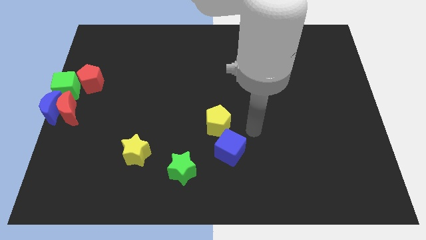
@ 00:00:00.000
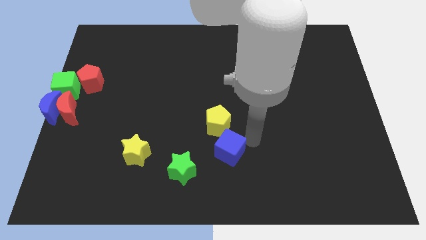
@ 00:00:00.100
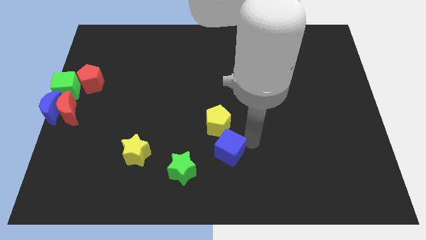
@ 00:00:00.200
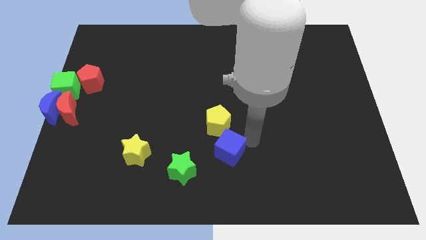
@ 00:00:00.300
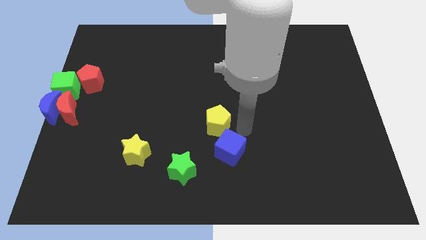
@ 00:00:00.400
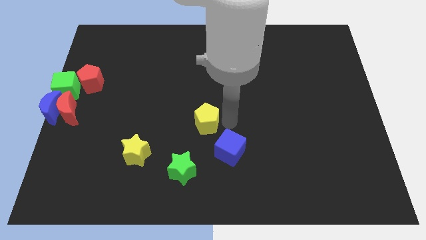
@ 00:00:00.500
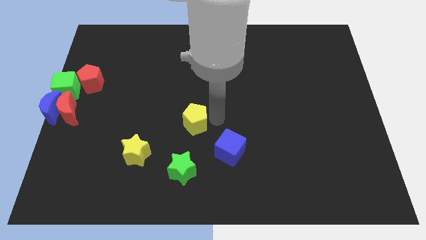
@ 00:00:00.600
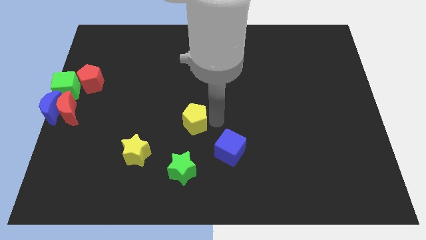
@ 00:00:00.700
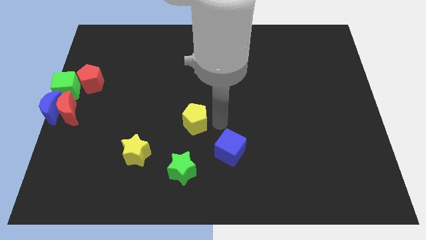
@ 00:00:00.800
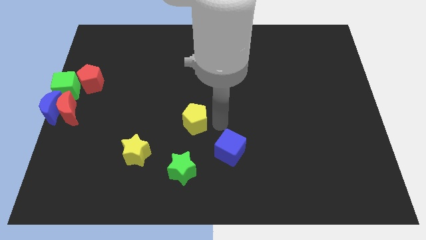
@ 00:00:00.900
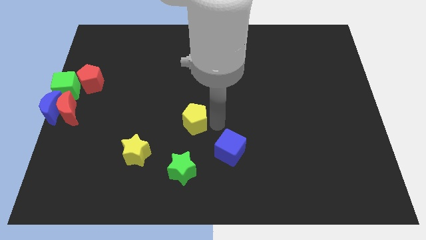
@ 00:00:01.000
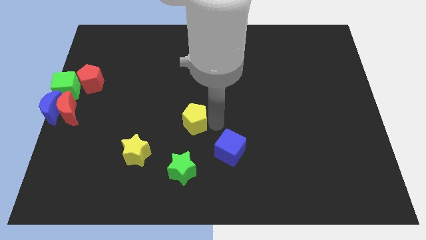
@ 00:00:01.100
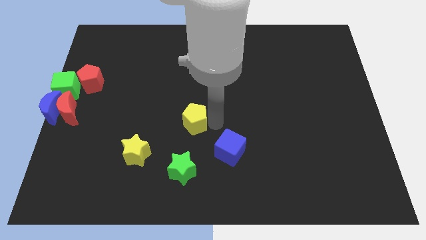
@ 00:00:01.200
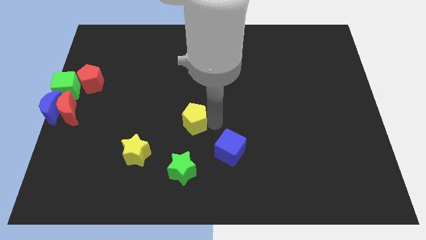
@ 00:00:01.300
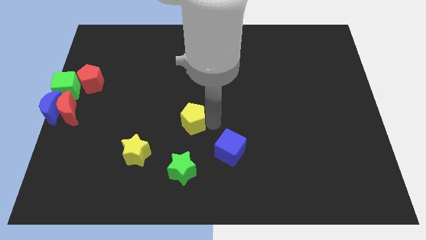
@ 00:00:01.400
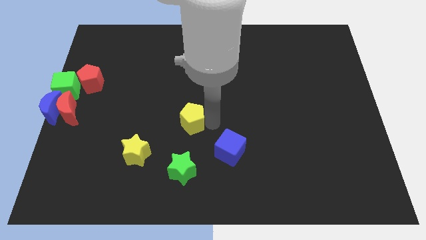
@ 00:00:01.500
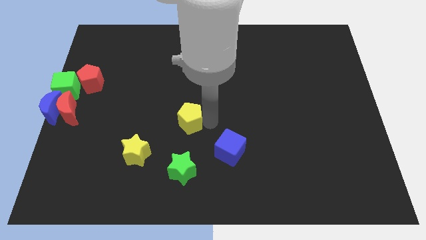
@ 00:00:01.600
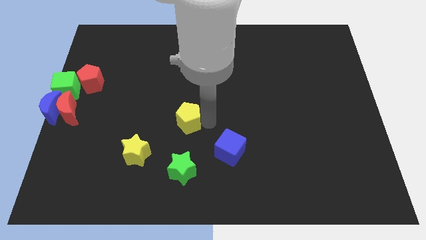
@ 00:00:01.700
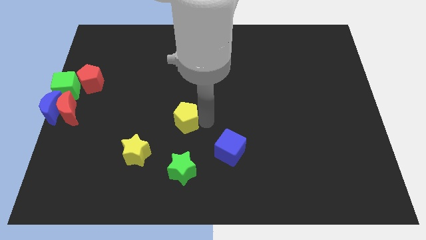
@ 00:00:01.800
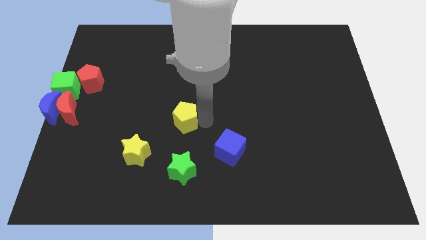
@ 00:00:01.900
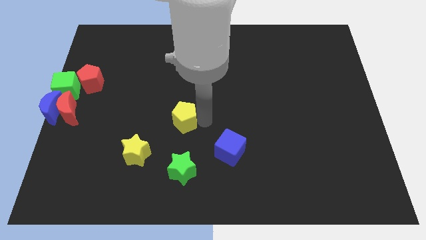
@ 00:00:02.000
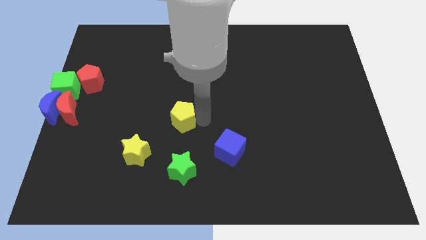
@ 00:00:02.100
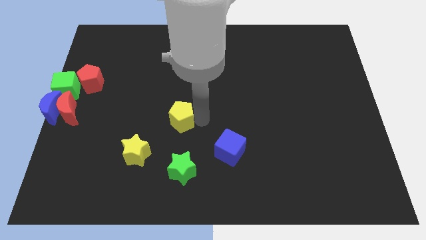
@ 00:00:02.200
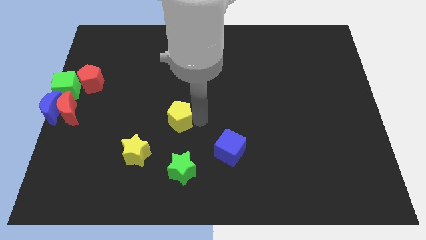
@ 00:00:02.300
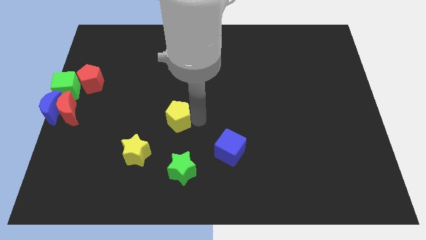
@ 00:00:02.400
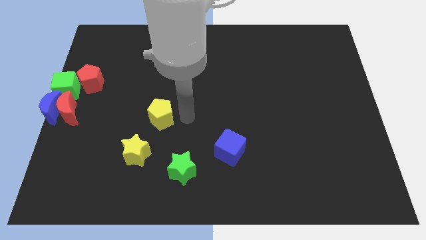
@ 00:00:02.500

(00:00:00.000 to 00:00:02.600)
move the yellow pentagon to the center

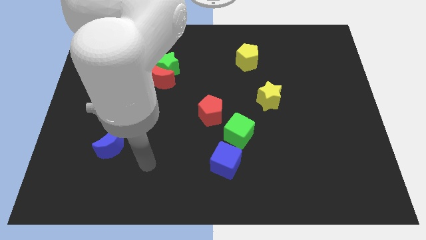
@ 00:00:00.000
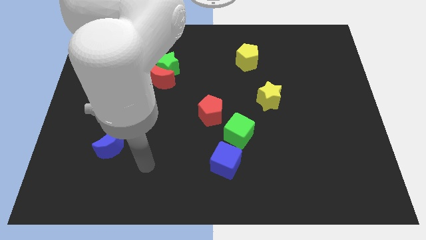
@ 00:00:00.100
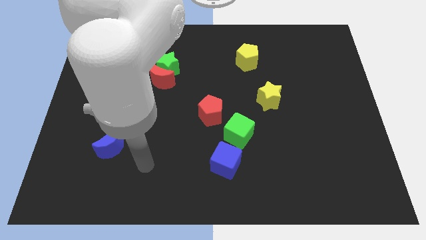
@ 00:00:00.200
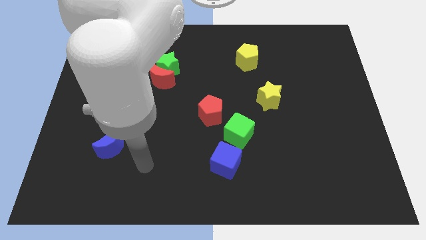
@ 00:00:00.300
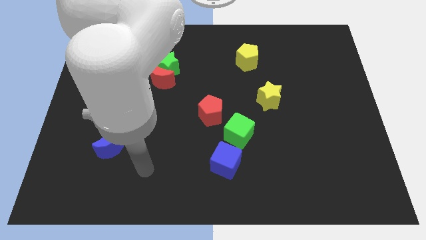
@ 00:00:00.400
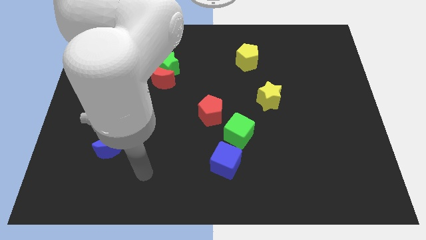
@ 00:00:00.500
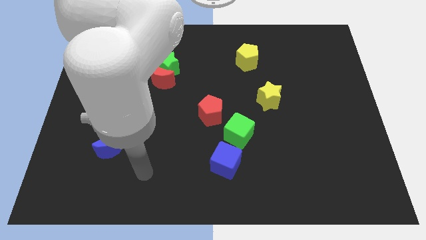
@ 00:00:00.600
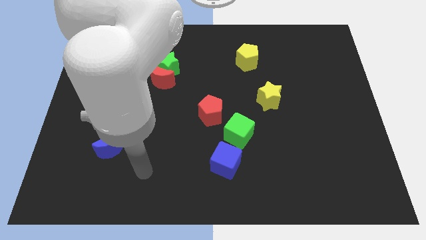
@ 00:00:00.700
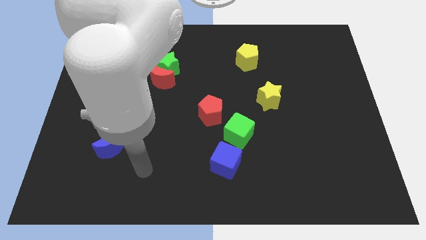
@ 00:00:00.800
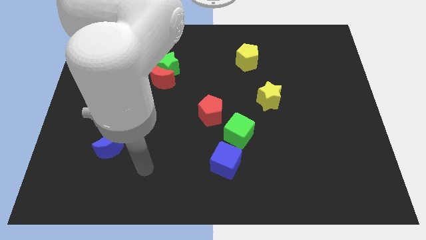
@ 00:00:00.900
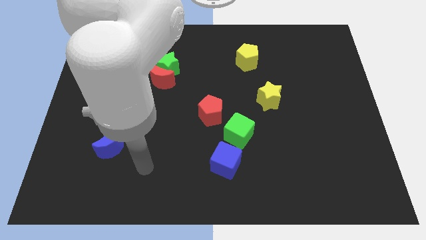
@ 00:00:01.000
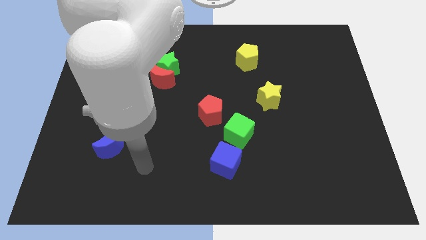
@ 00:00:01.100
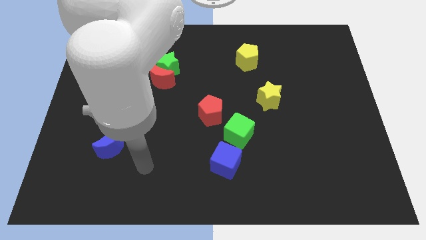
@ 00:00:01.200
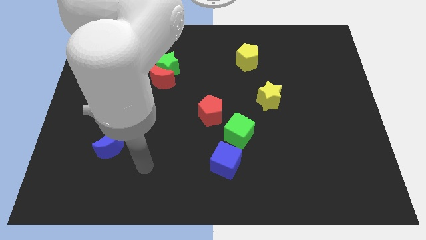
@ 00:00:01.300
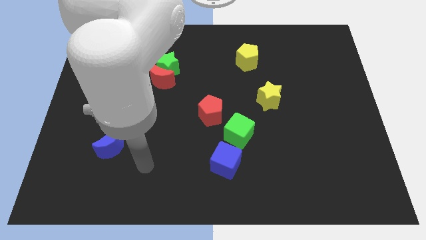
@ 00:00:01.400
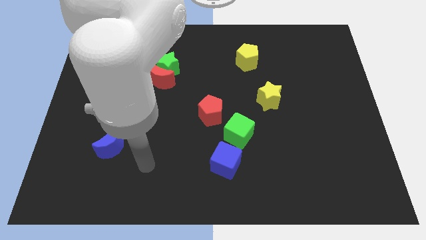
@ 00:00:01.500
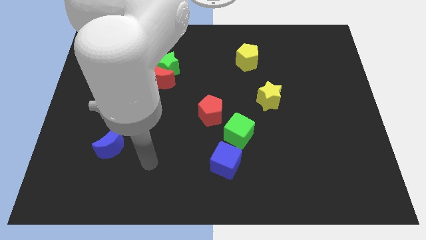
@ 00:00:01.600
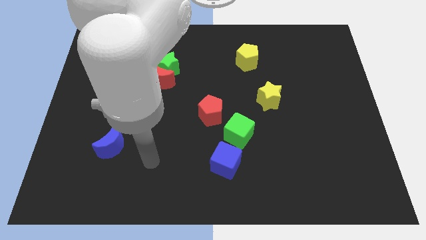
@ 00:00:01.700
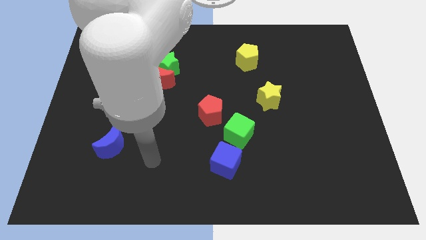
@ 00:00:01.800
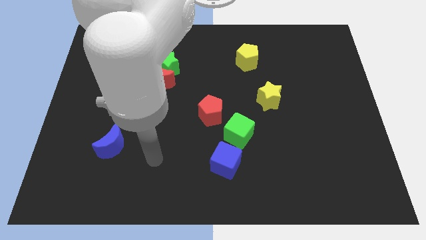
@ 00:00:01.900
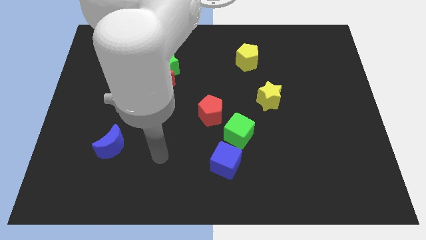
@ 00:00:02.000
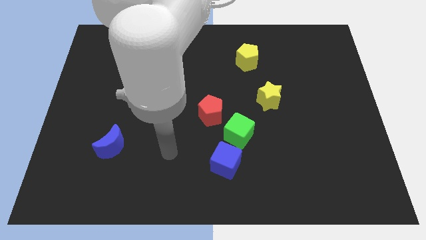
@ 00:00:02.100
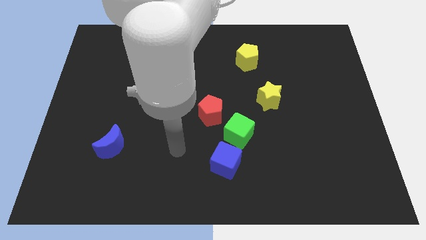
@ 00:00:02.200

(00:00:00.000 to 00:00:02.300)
place your arm in between blue moon and blue cube

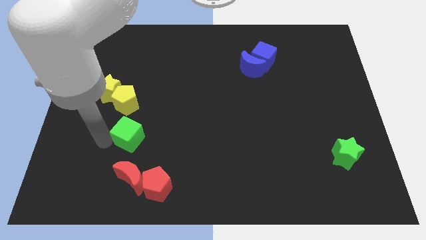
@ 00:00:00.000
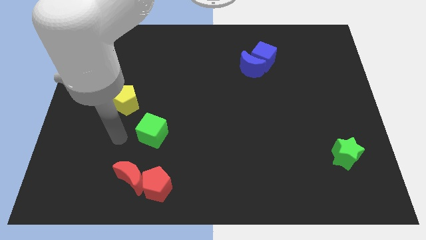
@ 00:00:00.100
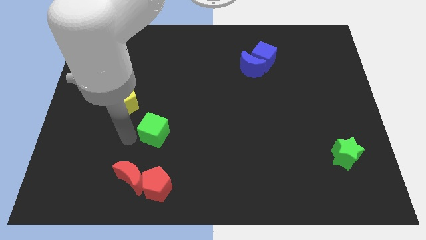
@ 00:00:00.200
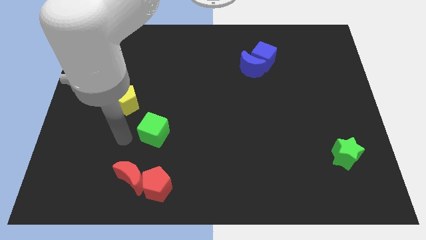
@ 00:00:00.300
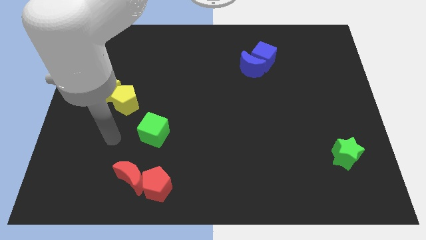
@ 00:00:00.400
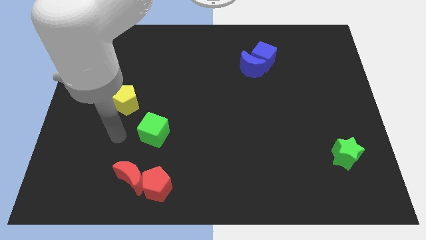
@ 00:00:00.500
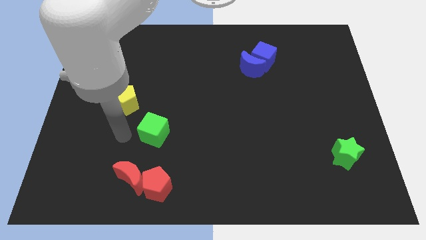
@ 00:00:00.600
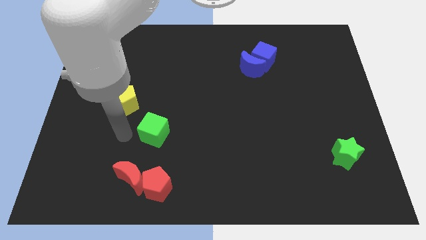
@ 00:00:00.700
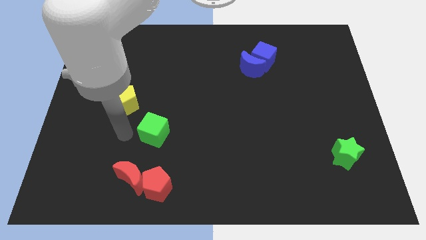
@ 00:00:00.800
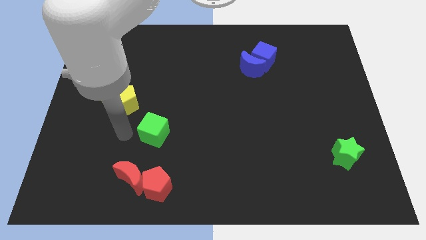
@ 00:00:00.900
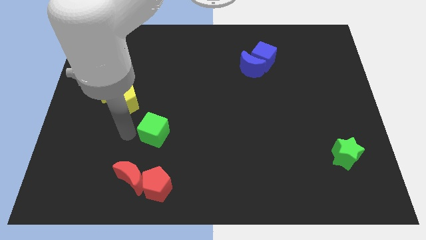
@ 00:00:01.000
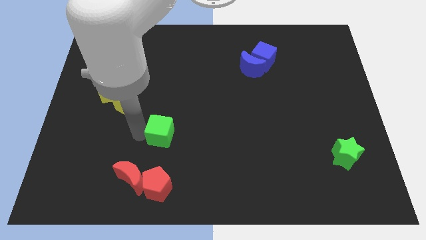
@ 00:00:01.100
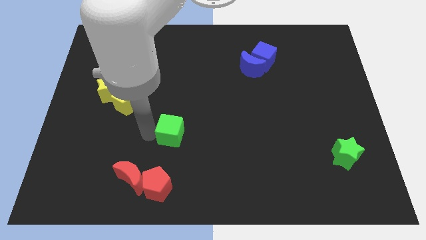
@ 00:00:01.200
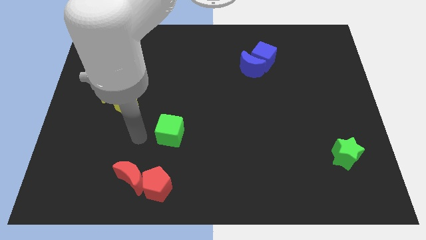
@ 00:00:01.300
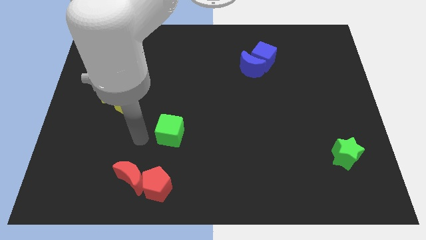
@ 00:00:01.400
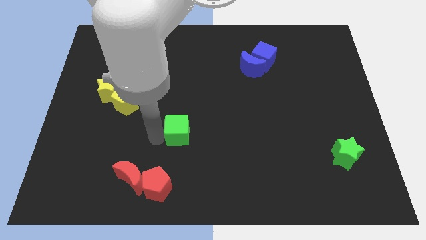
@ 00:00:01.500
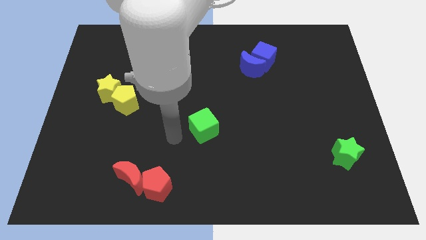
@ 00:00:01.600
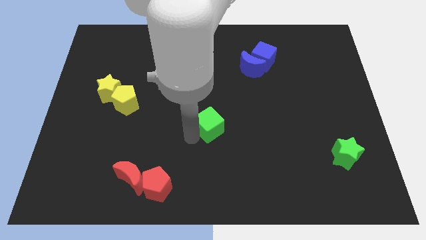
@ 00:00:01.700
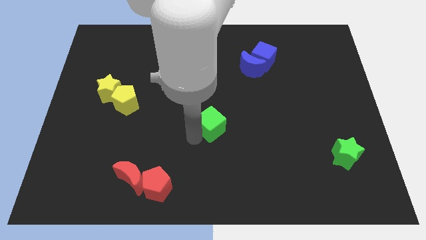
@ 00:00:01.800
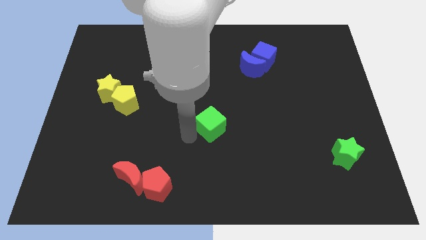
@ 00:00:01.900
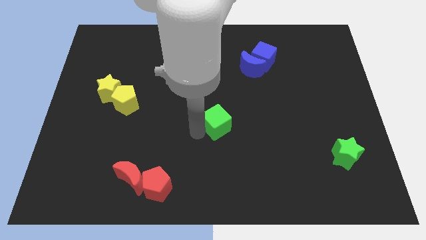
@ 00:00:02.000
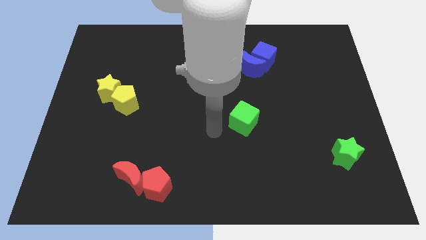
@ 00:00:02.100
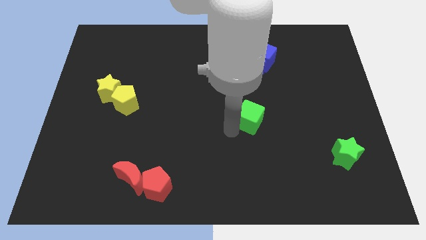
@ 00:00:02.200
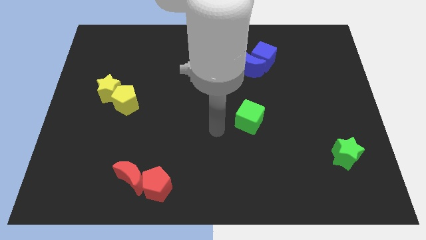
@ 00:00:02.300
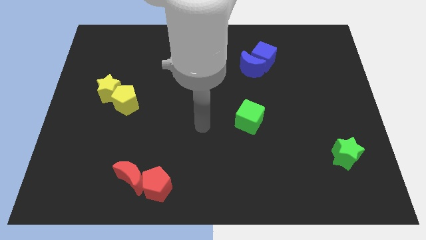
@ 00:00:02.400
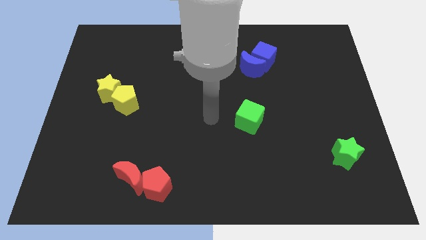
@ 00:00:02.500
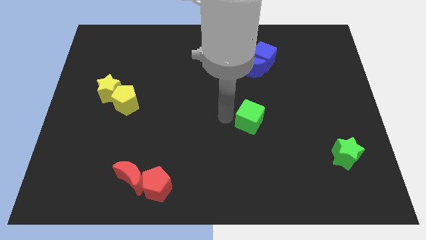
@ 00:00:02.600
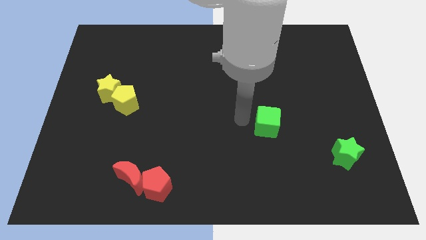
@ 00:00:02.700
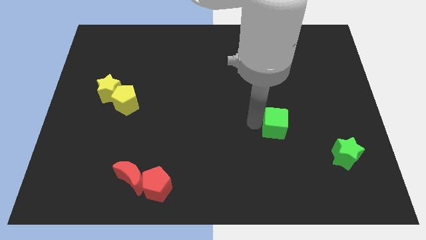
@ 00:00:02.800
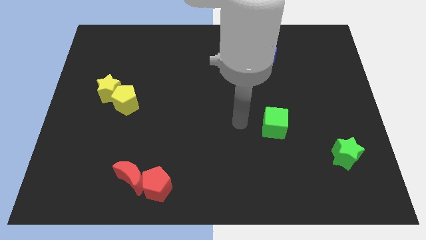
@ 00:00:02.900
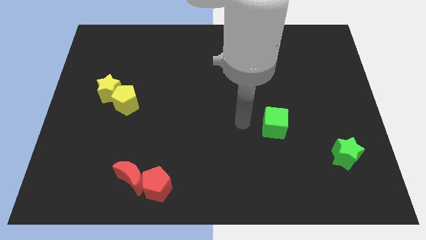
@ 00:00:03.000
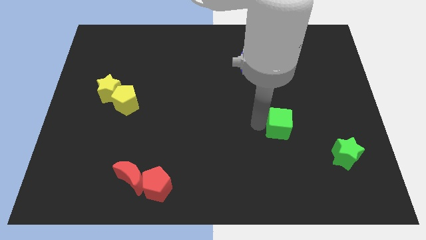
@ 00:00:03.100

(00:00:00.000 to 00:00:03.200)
move the green cube to the bottom of the blue cube

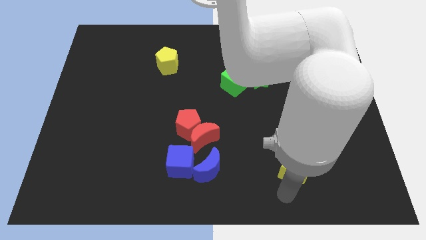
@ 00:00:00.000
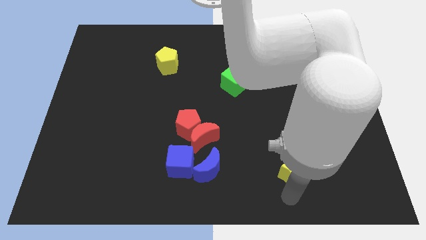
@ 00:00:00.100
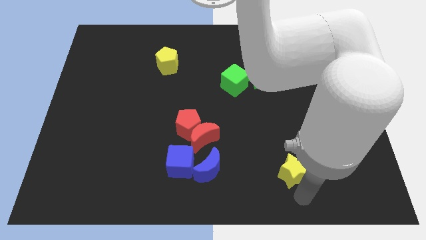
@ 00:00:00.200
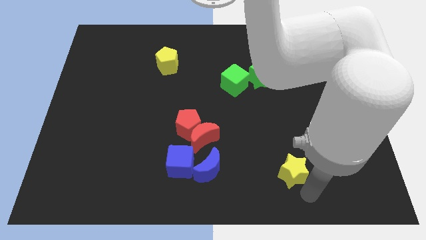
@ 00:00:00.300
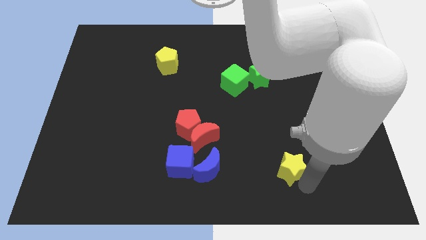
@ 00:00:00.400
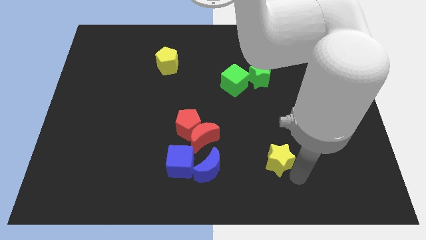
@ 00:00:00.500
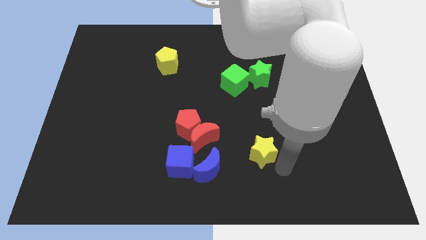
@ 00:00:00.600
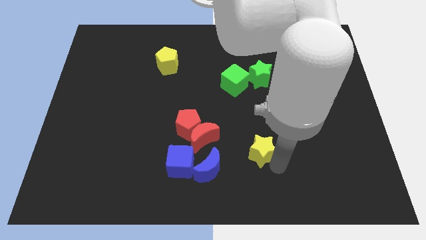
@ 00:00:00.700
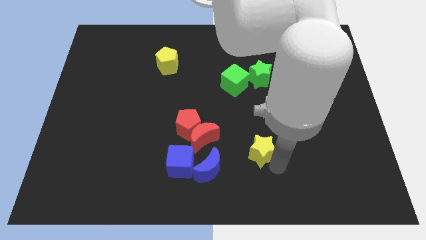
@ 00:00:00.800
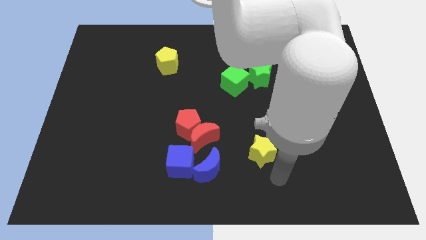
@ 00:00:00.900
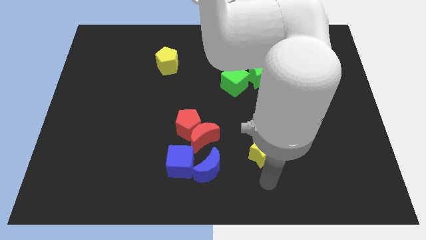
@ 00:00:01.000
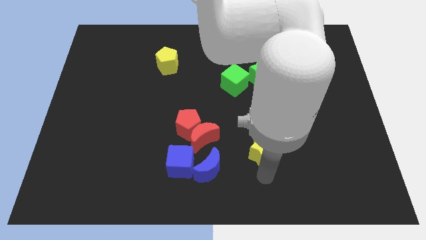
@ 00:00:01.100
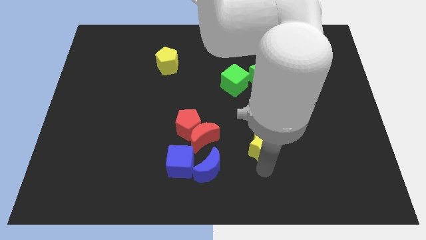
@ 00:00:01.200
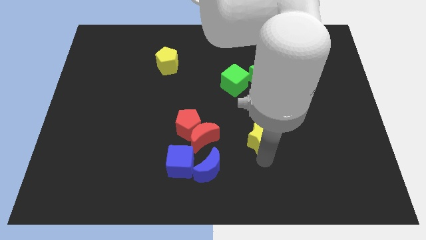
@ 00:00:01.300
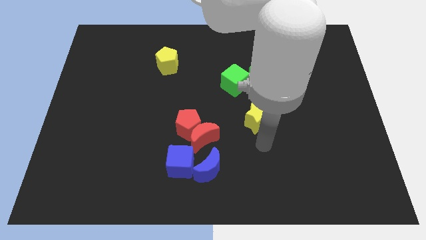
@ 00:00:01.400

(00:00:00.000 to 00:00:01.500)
put the yellow star parallel right to the red moon
